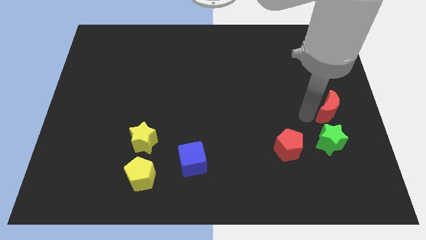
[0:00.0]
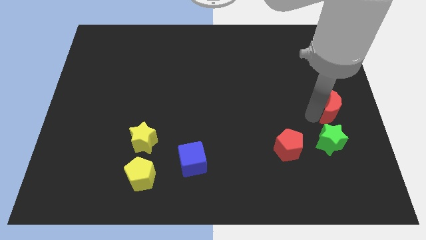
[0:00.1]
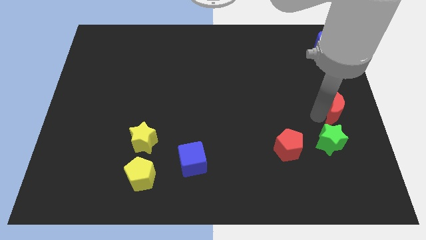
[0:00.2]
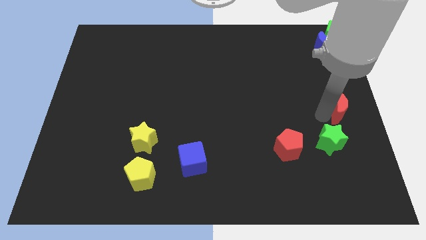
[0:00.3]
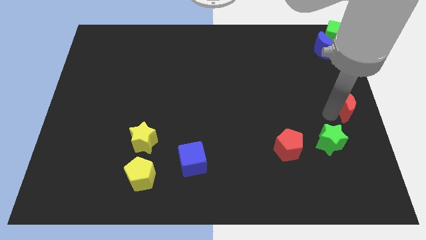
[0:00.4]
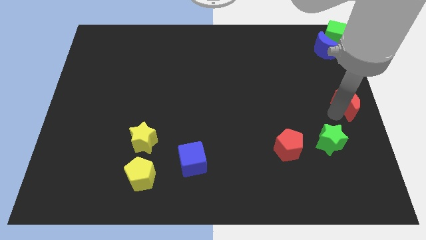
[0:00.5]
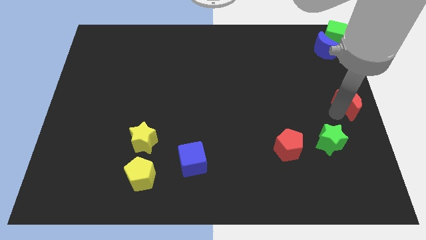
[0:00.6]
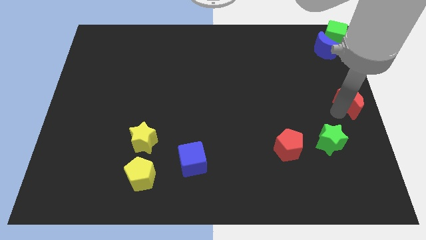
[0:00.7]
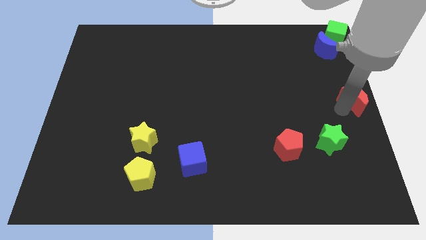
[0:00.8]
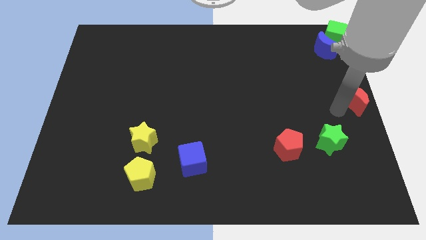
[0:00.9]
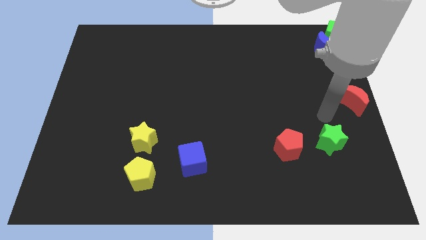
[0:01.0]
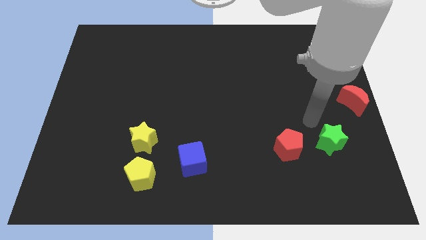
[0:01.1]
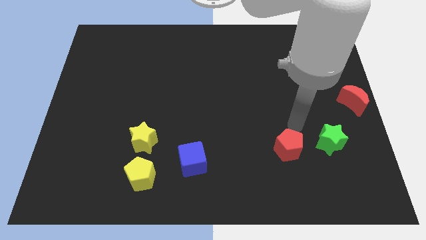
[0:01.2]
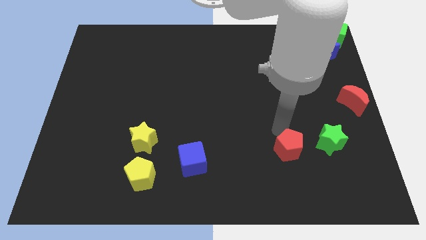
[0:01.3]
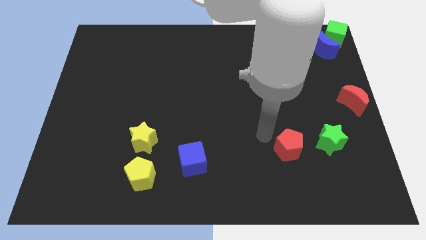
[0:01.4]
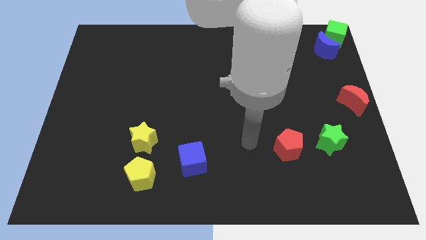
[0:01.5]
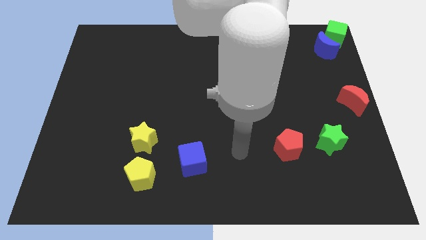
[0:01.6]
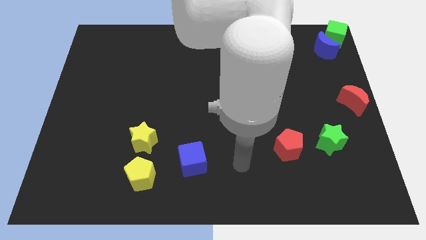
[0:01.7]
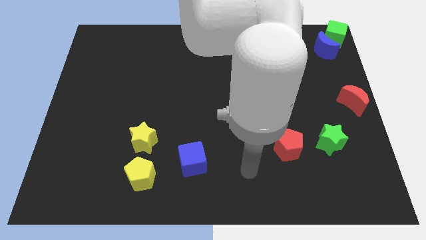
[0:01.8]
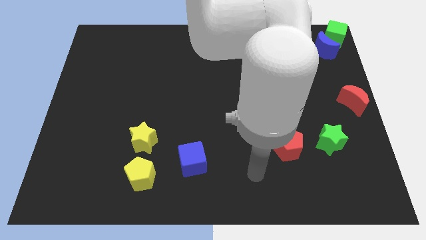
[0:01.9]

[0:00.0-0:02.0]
move the red moon to the center right of the board

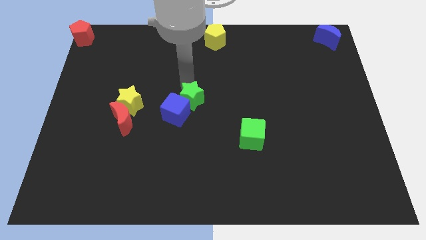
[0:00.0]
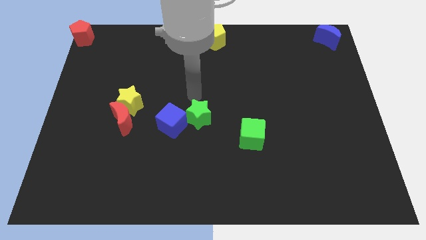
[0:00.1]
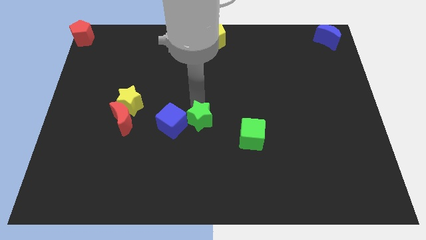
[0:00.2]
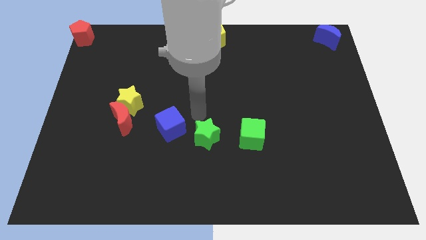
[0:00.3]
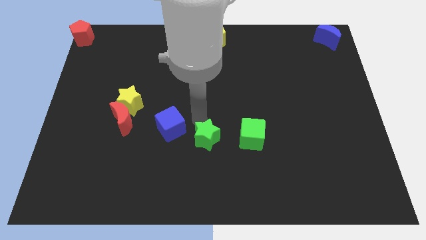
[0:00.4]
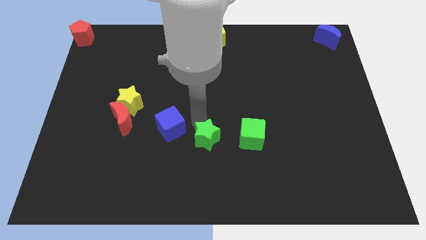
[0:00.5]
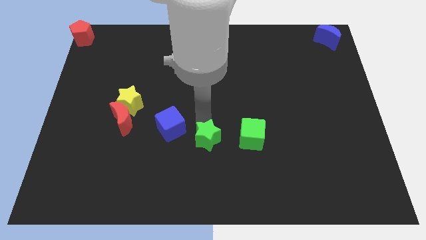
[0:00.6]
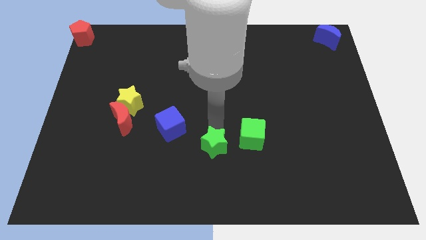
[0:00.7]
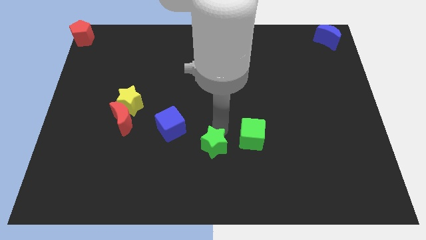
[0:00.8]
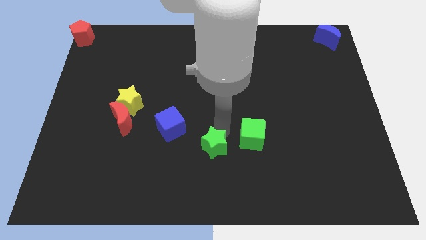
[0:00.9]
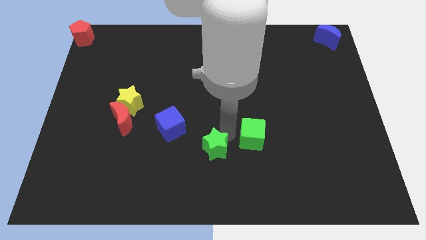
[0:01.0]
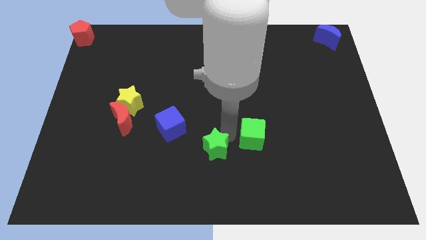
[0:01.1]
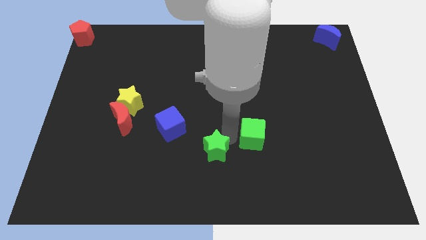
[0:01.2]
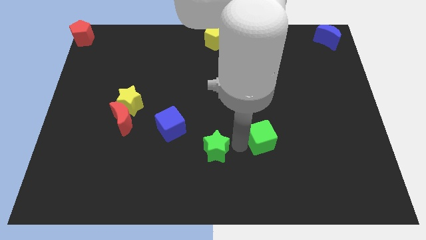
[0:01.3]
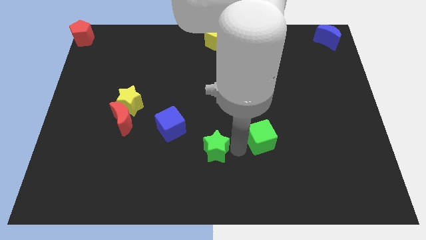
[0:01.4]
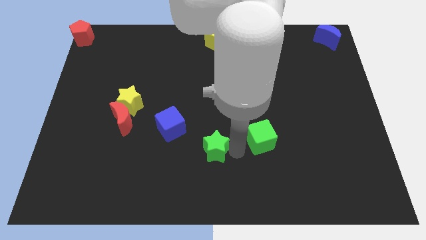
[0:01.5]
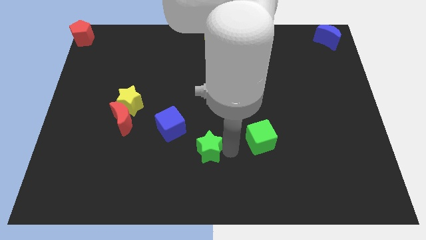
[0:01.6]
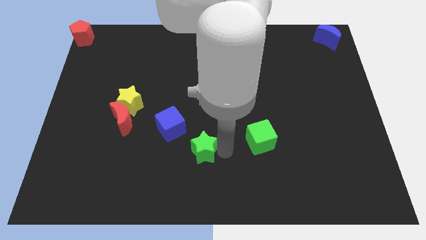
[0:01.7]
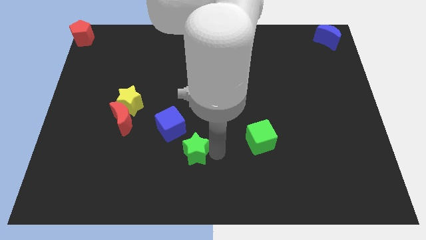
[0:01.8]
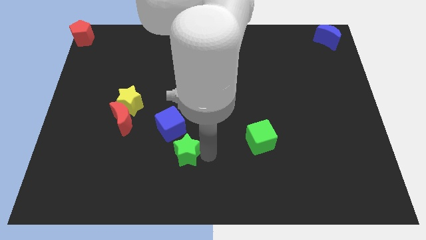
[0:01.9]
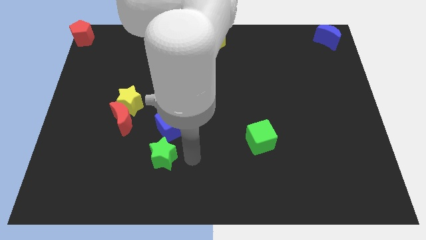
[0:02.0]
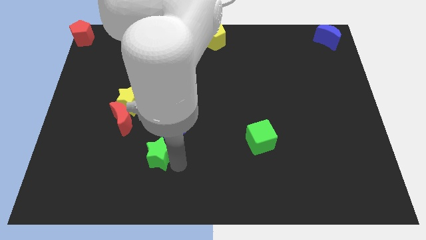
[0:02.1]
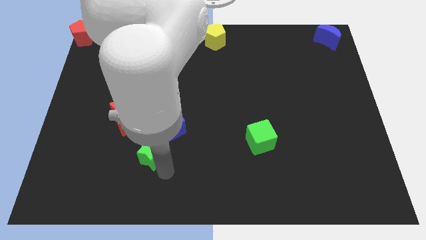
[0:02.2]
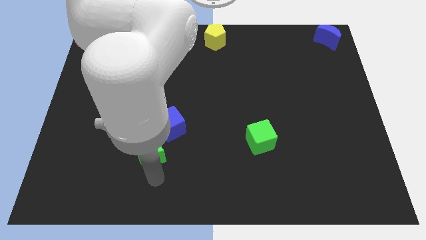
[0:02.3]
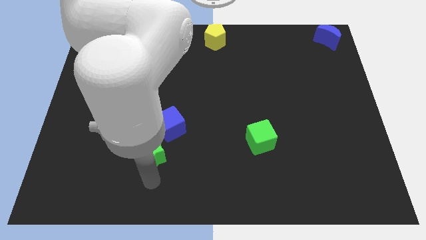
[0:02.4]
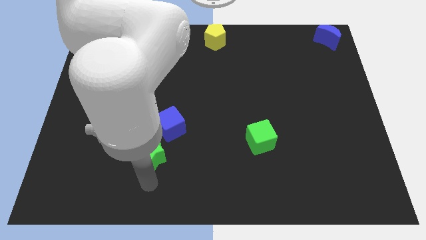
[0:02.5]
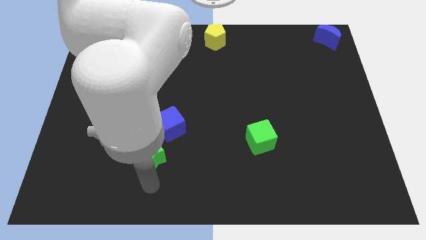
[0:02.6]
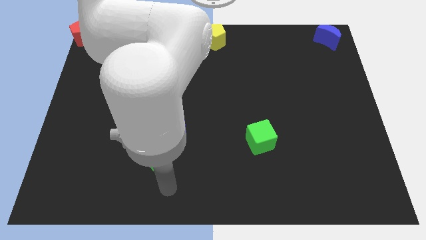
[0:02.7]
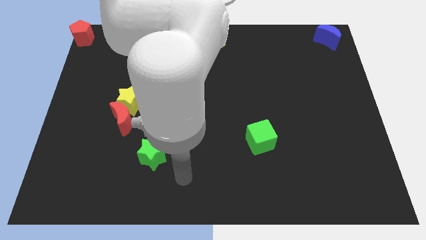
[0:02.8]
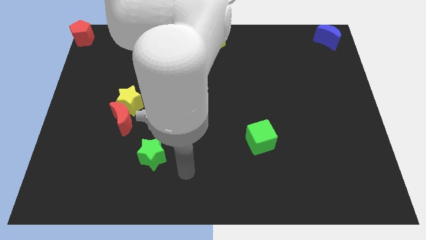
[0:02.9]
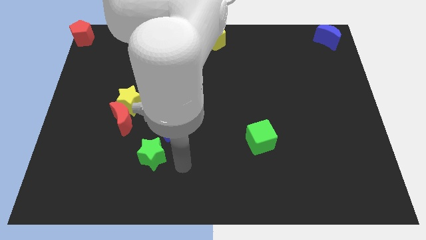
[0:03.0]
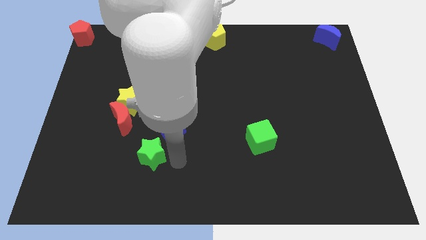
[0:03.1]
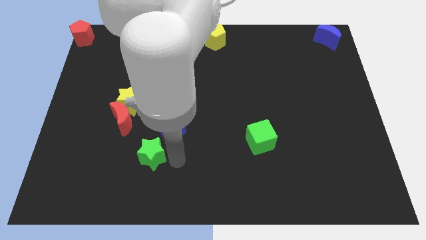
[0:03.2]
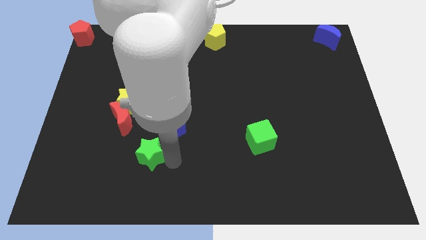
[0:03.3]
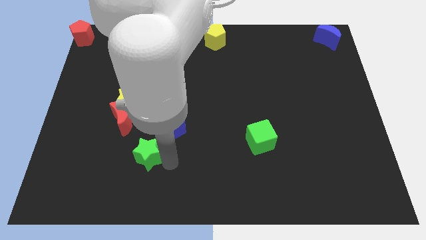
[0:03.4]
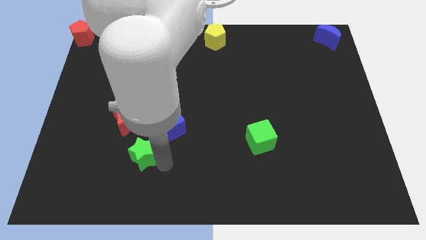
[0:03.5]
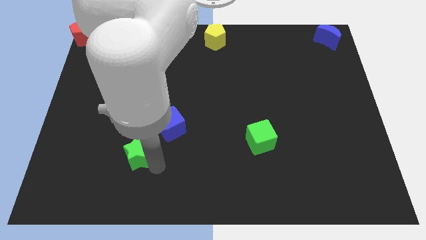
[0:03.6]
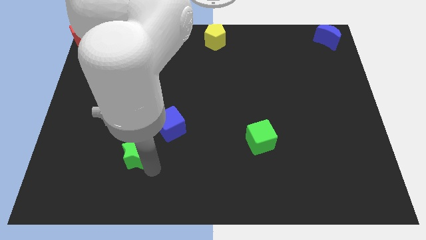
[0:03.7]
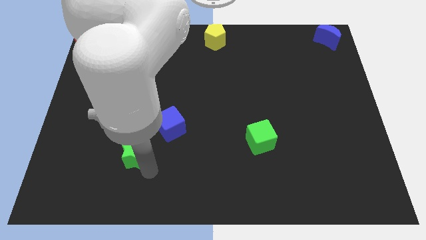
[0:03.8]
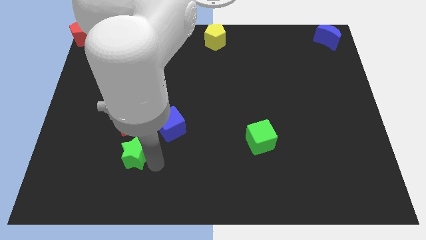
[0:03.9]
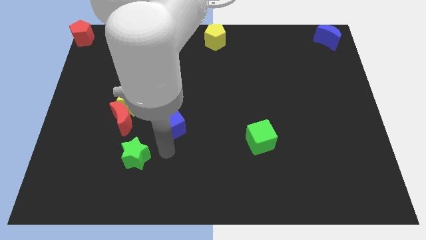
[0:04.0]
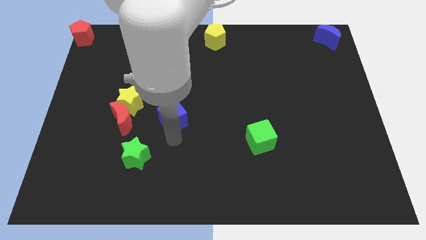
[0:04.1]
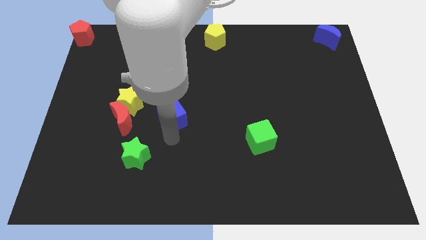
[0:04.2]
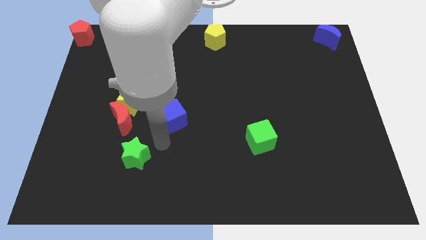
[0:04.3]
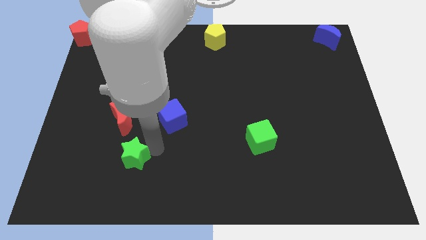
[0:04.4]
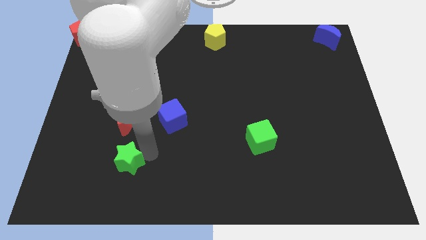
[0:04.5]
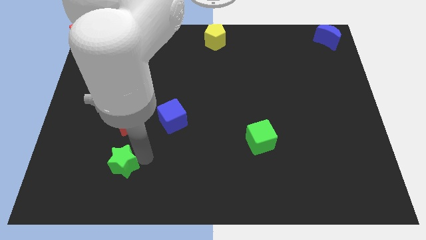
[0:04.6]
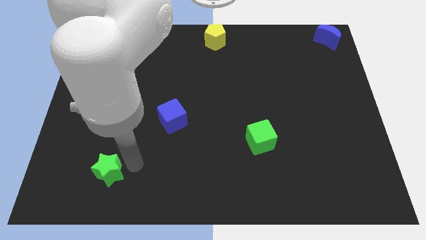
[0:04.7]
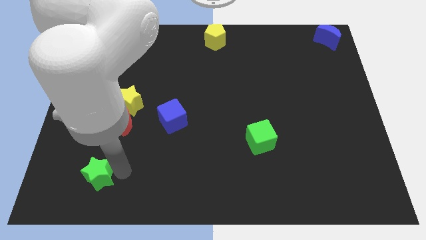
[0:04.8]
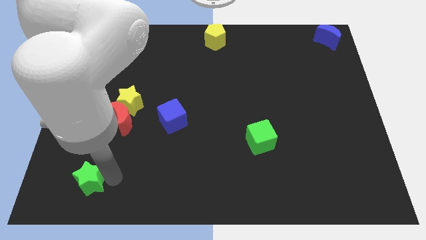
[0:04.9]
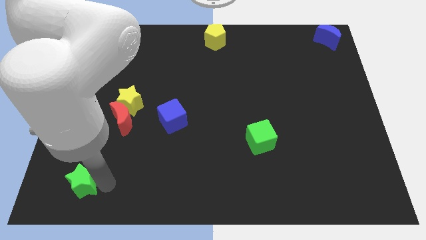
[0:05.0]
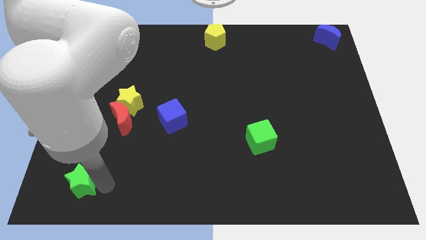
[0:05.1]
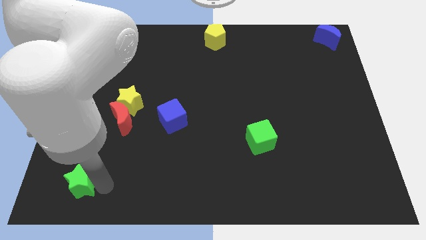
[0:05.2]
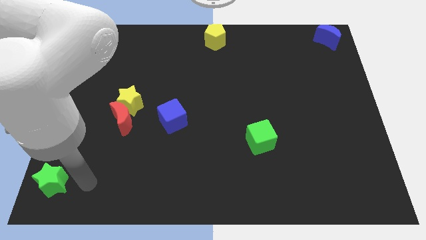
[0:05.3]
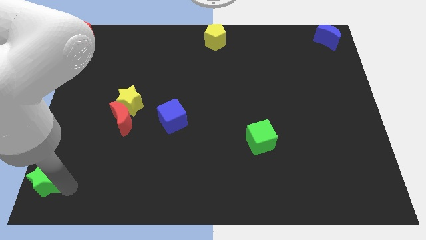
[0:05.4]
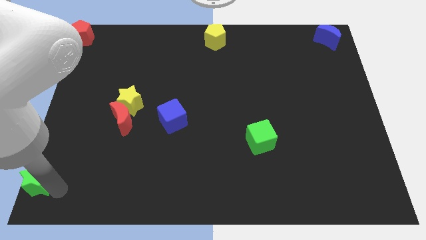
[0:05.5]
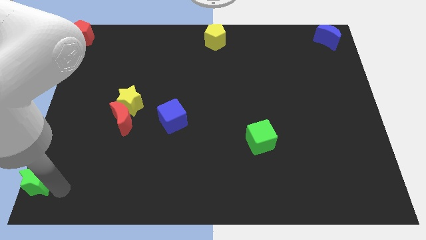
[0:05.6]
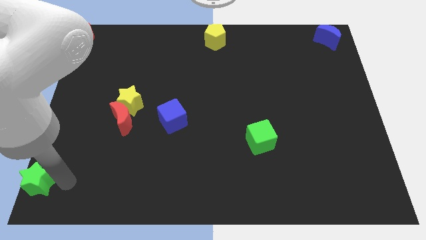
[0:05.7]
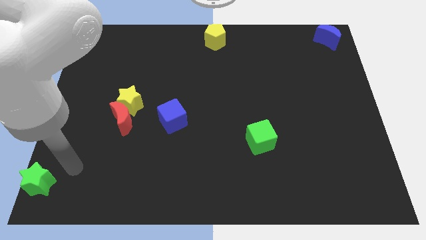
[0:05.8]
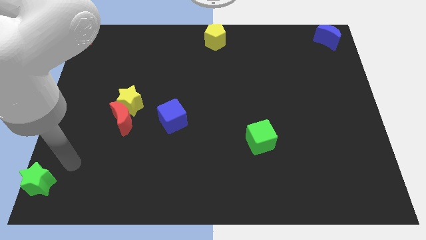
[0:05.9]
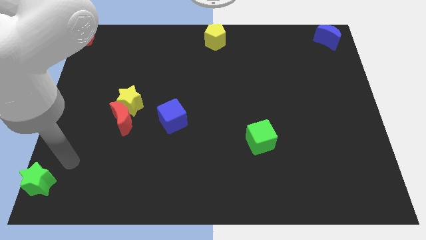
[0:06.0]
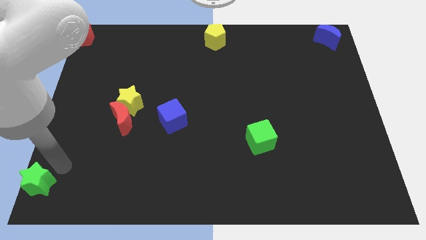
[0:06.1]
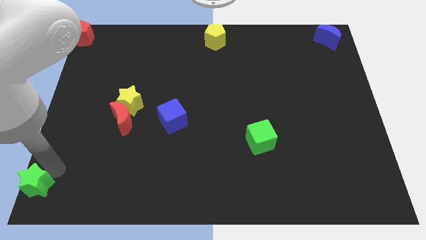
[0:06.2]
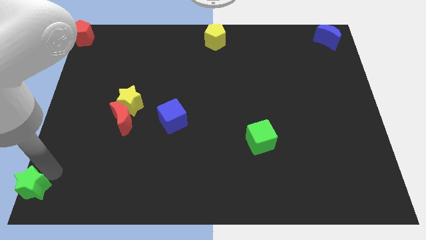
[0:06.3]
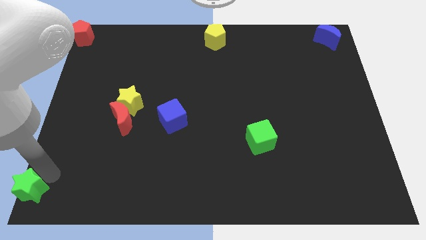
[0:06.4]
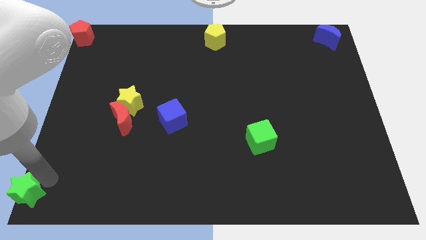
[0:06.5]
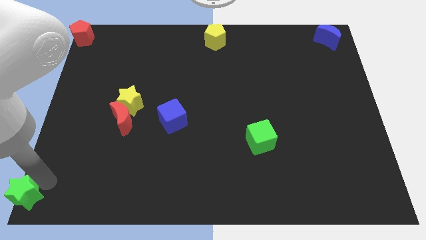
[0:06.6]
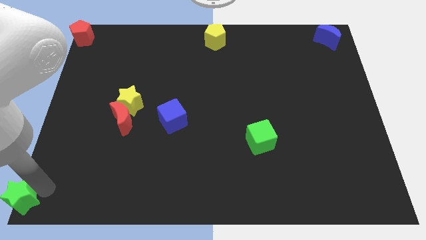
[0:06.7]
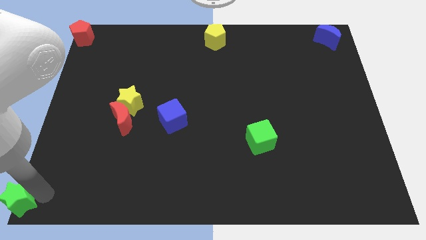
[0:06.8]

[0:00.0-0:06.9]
place the green star at the bottom left corner
